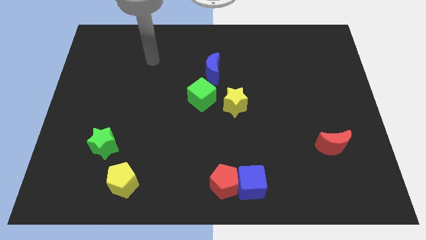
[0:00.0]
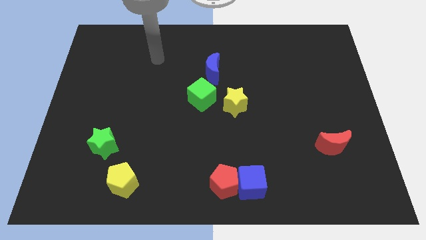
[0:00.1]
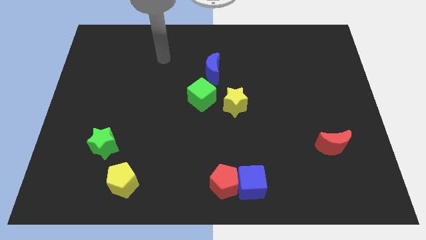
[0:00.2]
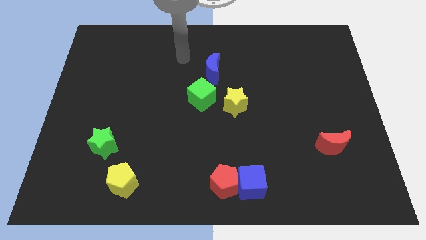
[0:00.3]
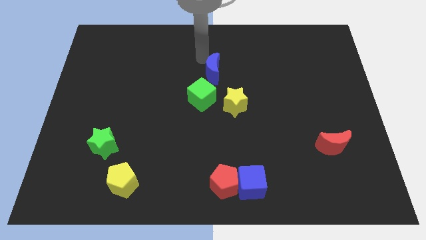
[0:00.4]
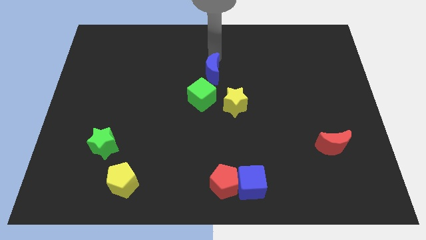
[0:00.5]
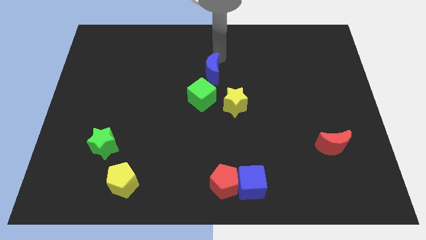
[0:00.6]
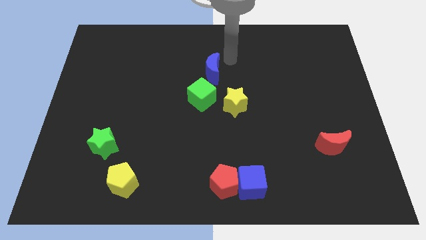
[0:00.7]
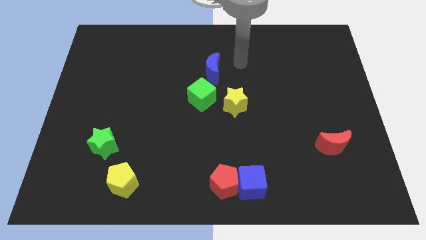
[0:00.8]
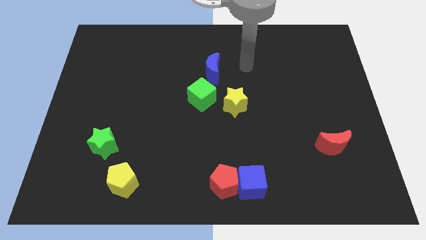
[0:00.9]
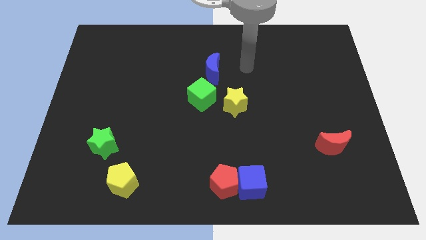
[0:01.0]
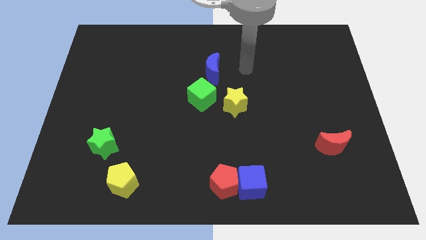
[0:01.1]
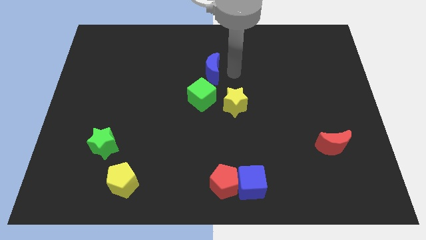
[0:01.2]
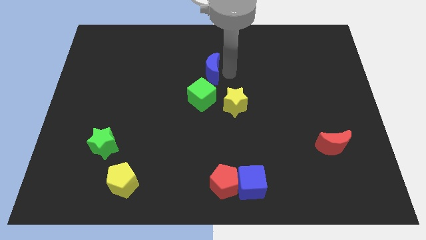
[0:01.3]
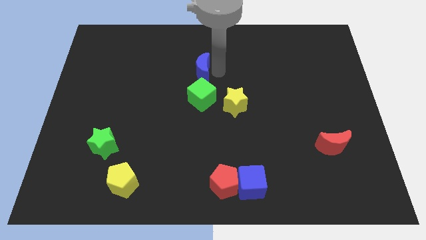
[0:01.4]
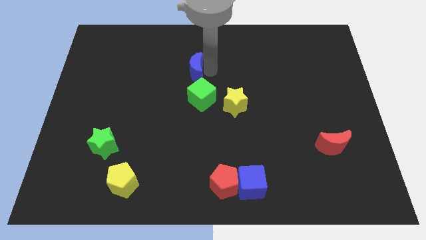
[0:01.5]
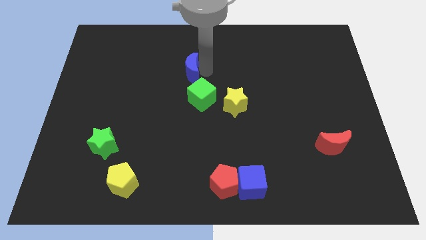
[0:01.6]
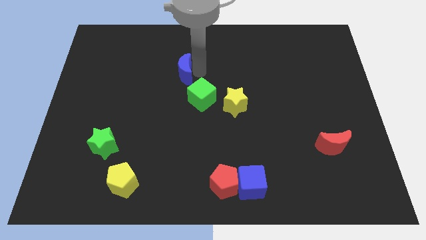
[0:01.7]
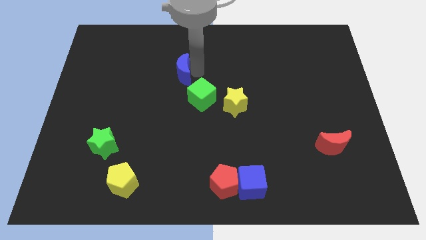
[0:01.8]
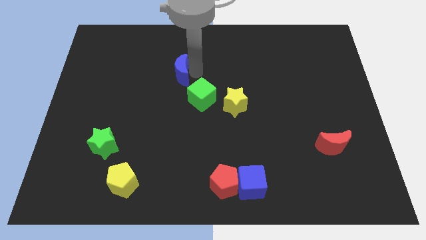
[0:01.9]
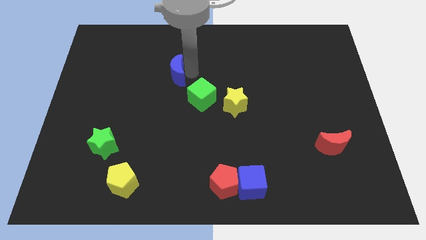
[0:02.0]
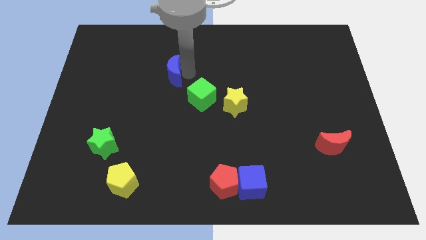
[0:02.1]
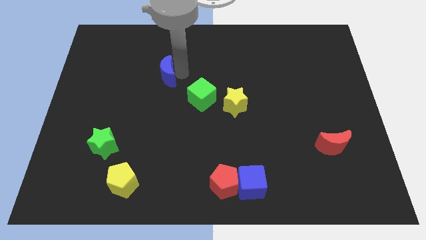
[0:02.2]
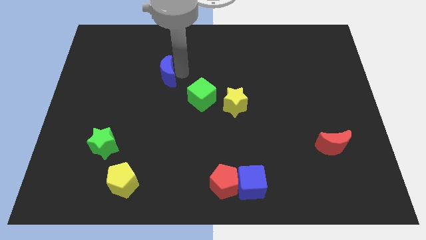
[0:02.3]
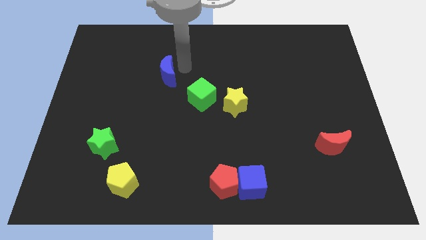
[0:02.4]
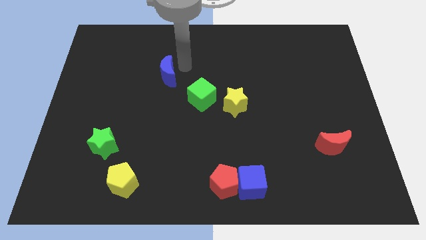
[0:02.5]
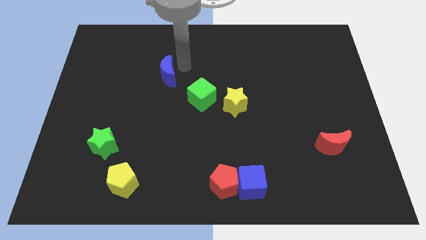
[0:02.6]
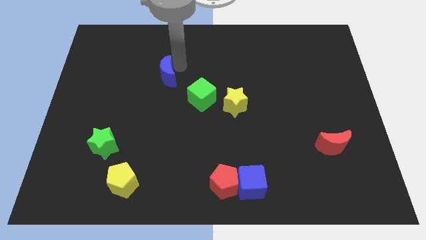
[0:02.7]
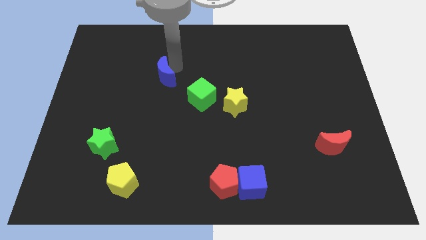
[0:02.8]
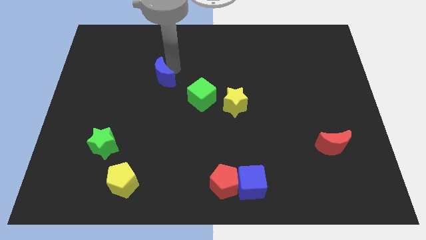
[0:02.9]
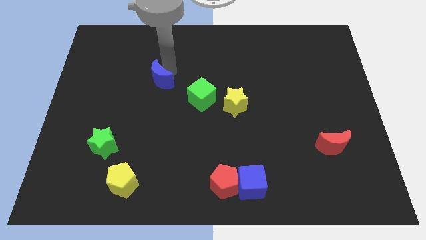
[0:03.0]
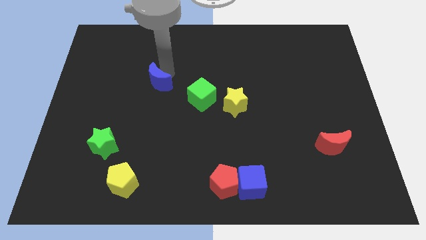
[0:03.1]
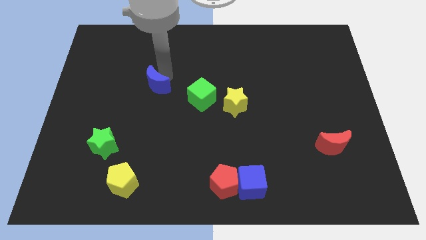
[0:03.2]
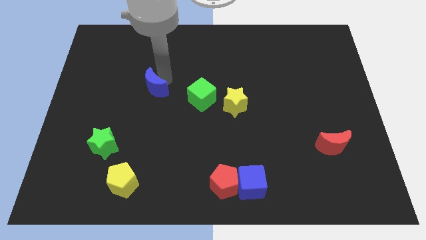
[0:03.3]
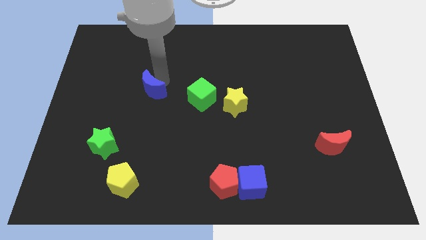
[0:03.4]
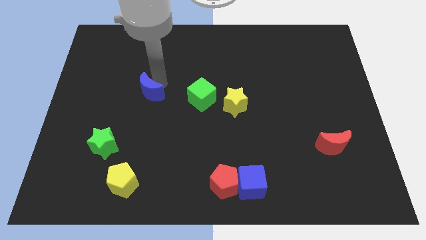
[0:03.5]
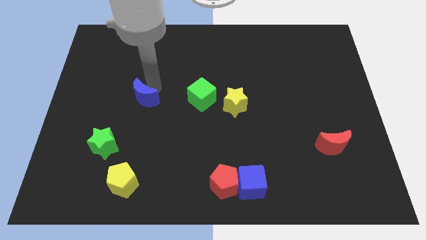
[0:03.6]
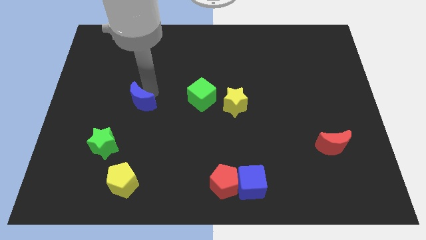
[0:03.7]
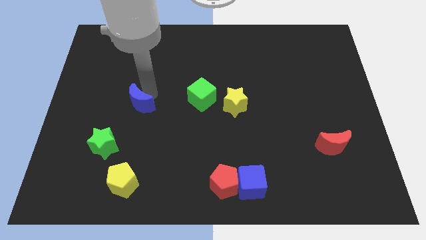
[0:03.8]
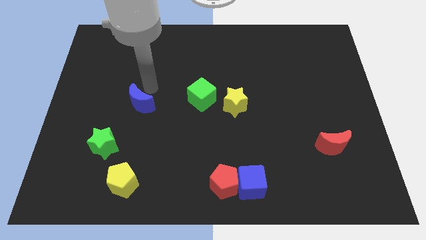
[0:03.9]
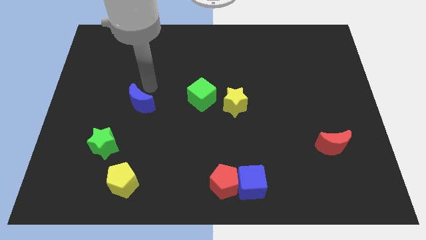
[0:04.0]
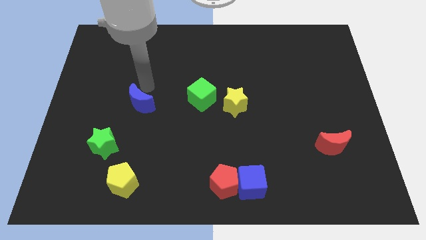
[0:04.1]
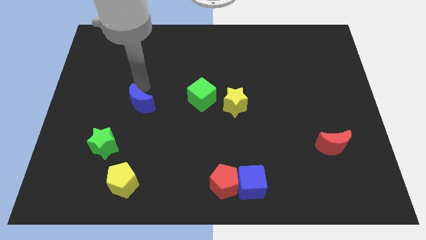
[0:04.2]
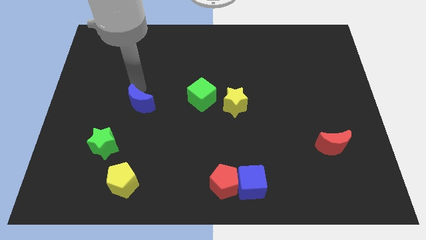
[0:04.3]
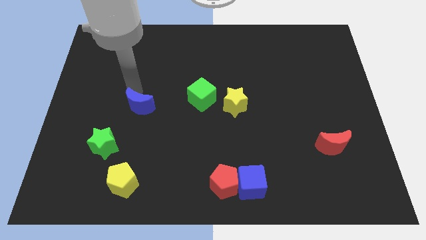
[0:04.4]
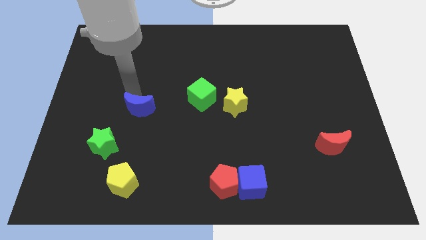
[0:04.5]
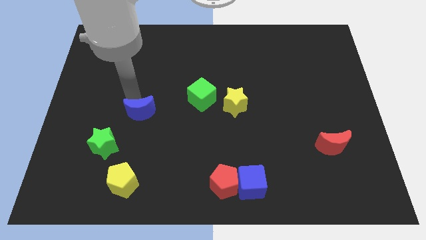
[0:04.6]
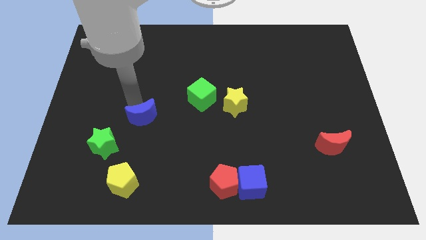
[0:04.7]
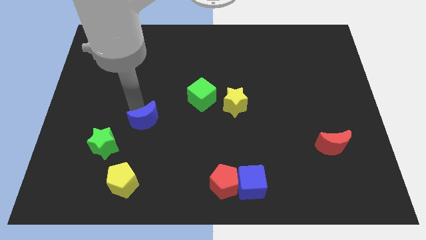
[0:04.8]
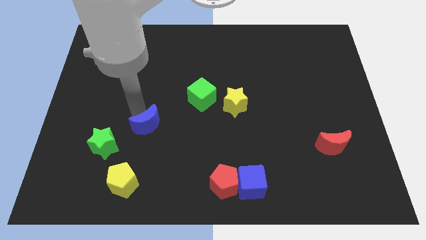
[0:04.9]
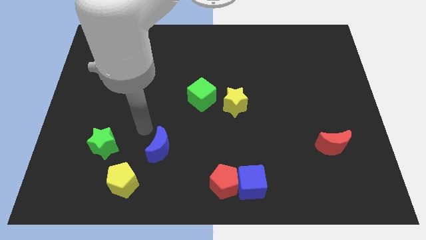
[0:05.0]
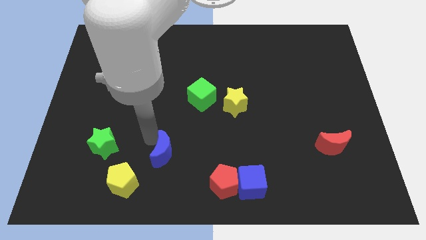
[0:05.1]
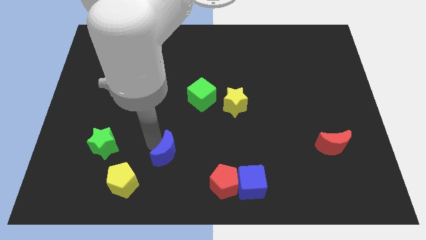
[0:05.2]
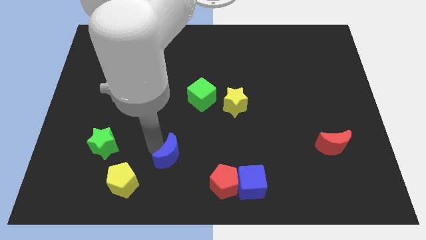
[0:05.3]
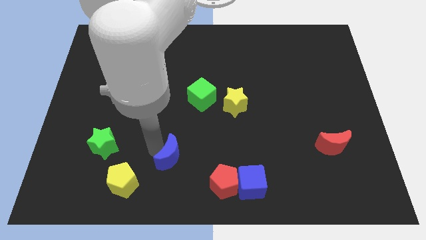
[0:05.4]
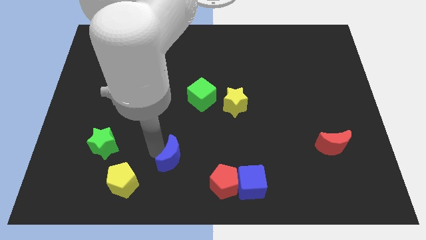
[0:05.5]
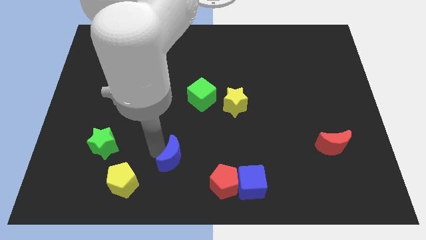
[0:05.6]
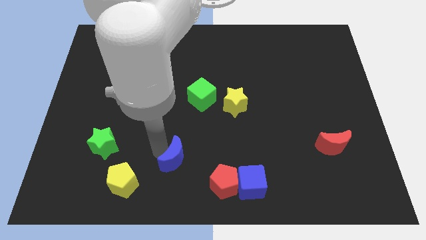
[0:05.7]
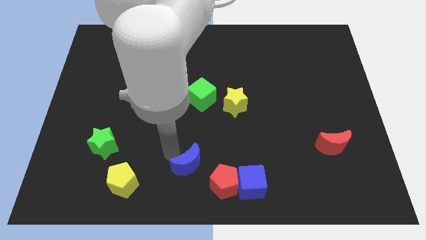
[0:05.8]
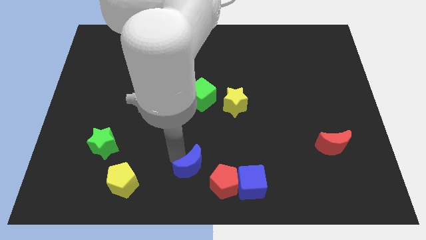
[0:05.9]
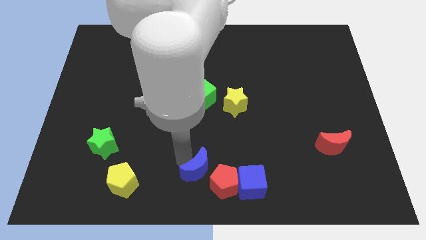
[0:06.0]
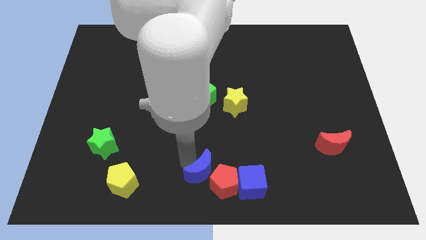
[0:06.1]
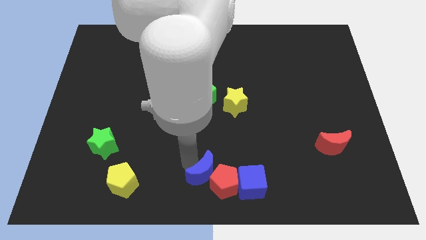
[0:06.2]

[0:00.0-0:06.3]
push the blue moon towards the red pentagon

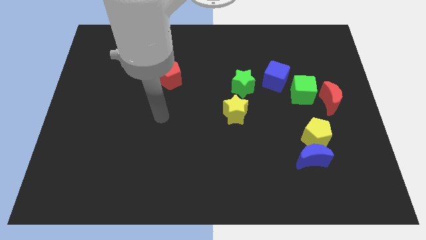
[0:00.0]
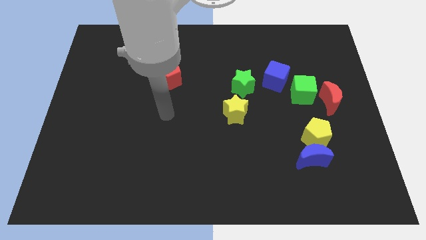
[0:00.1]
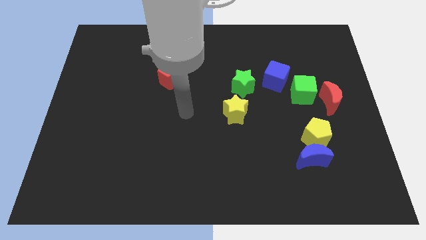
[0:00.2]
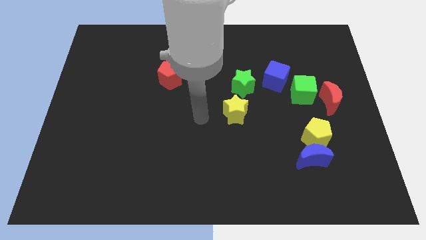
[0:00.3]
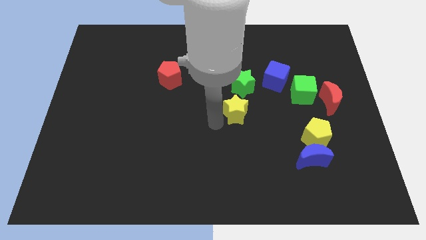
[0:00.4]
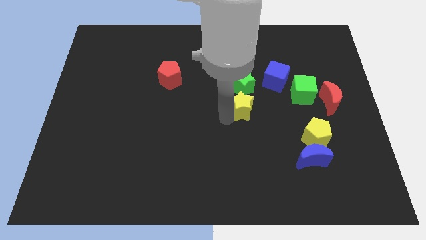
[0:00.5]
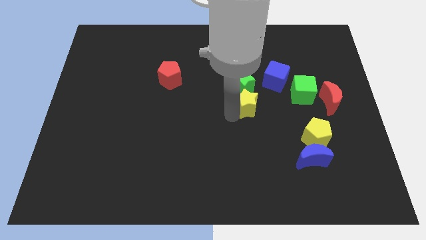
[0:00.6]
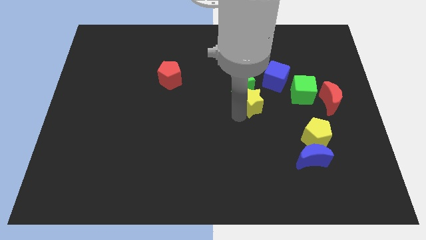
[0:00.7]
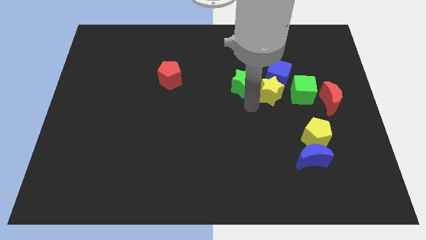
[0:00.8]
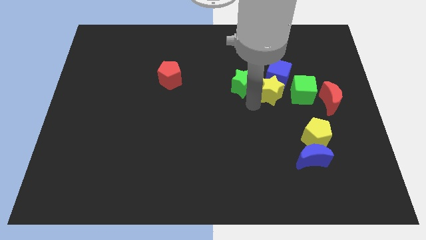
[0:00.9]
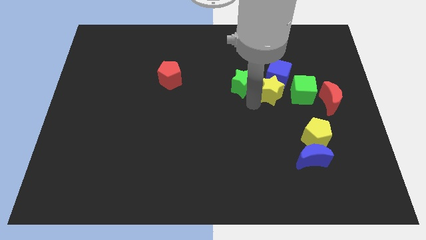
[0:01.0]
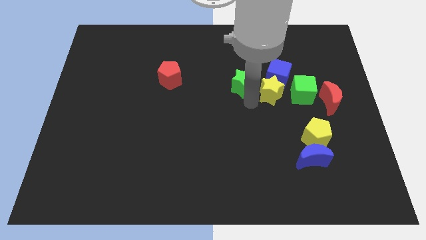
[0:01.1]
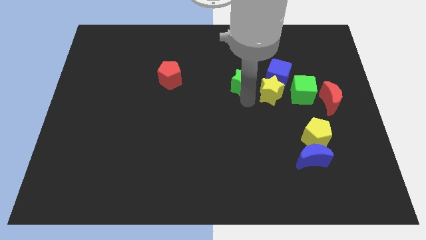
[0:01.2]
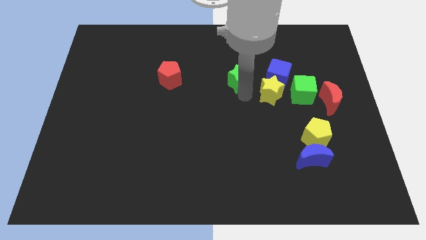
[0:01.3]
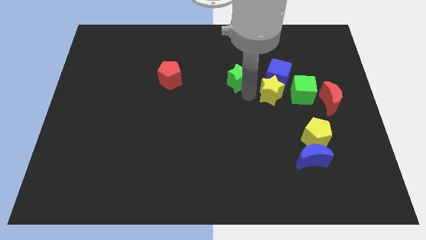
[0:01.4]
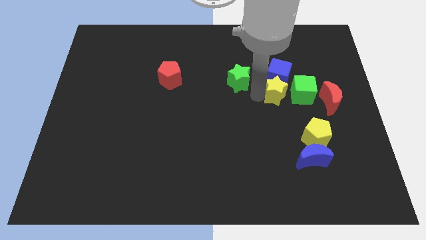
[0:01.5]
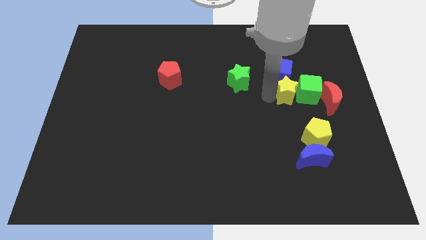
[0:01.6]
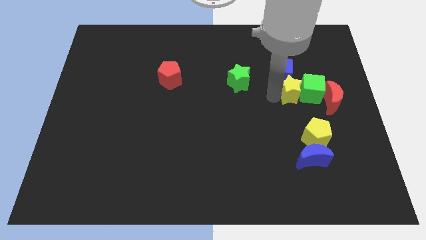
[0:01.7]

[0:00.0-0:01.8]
push the yellow star next to the green cube

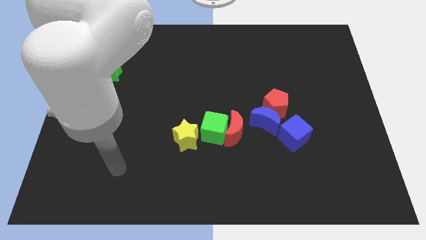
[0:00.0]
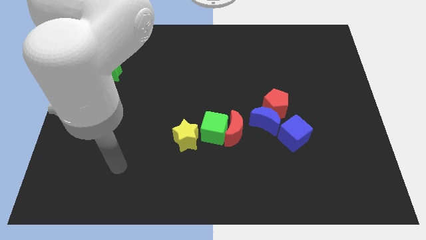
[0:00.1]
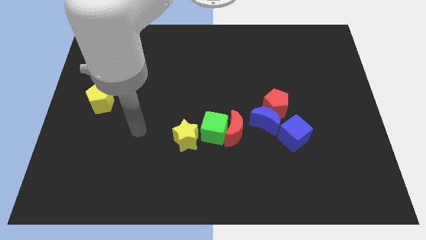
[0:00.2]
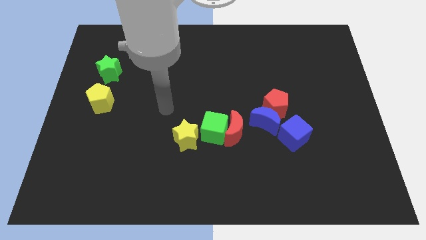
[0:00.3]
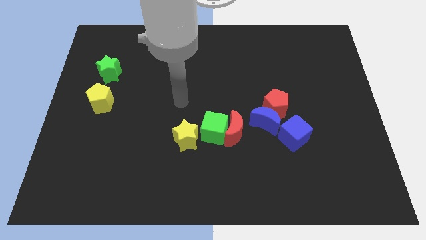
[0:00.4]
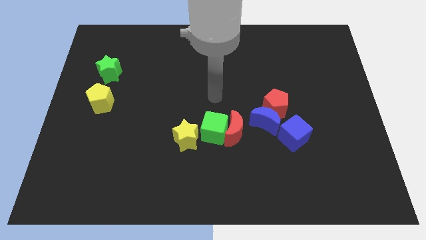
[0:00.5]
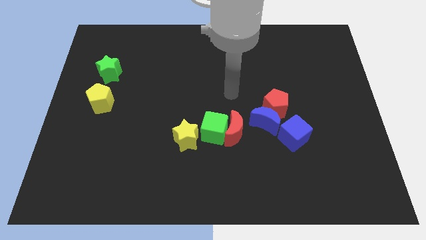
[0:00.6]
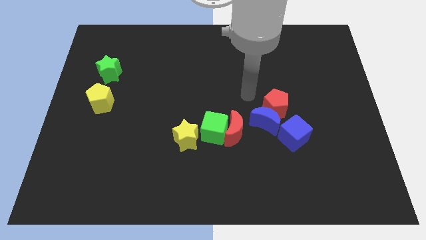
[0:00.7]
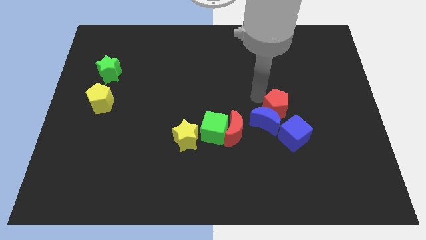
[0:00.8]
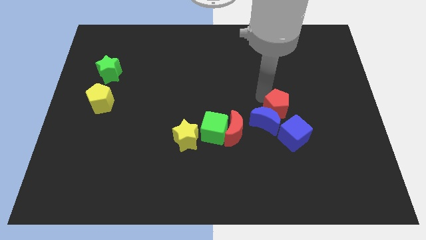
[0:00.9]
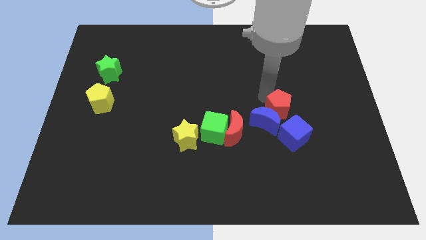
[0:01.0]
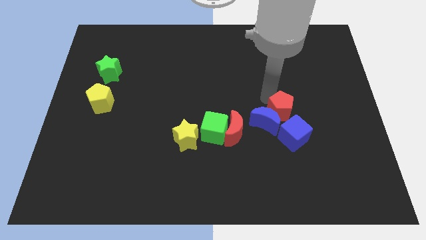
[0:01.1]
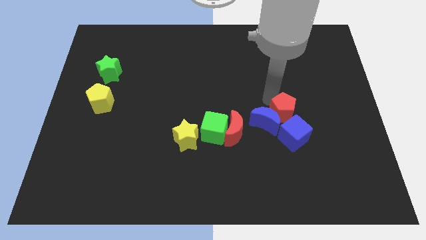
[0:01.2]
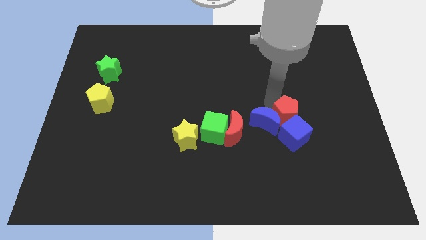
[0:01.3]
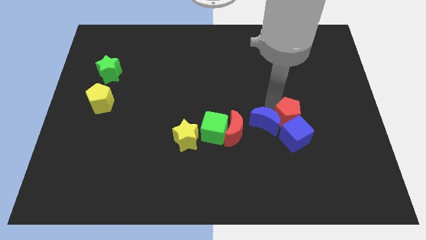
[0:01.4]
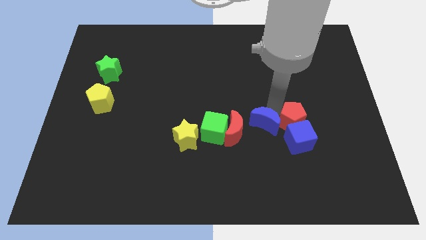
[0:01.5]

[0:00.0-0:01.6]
move the red pentagon next to the blue cube
